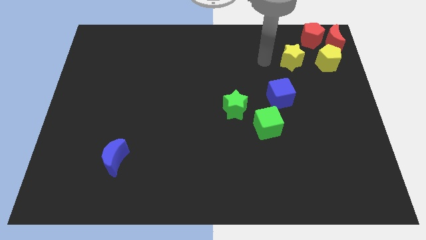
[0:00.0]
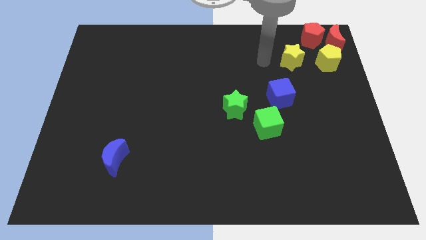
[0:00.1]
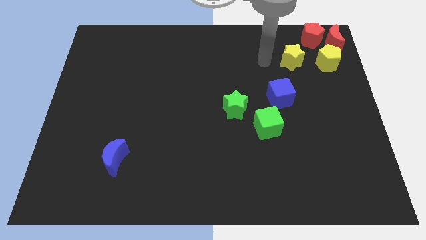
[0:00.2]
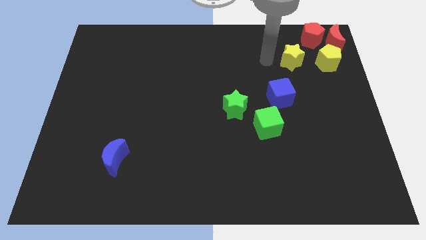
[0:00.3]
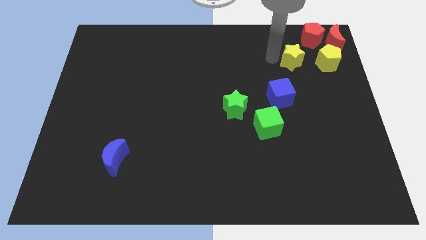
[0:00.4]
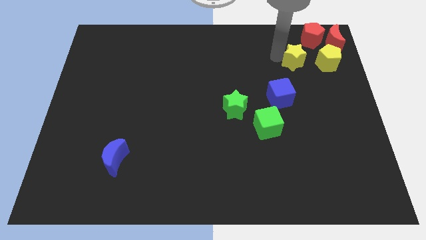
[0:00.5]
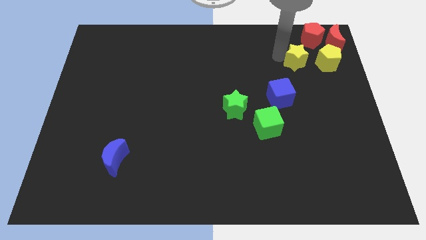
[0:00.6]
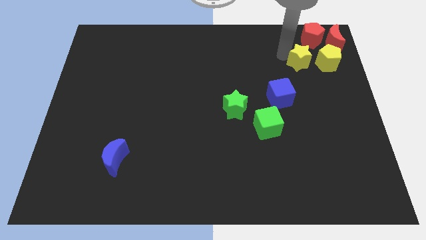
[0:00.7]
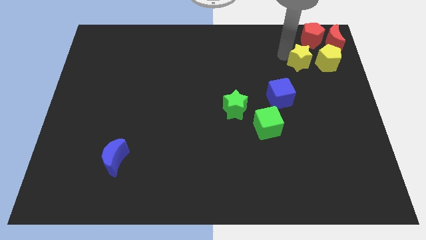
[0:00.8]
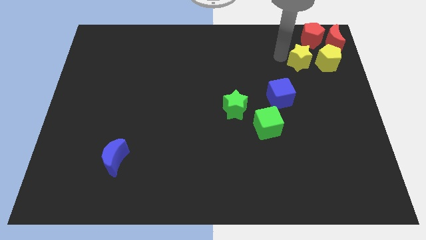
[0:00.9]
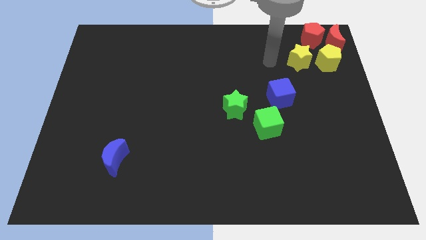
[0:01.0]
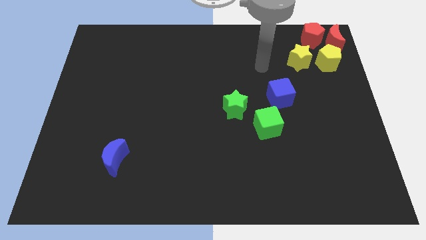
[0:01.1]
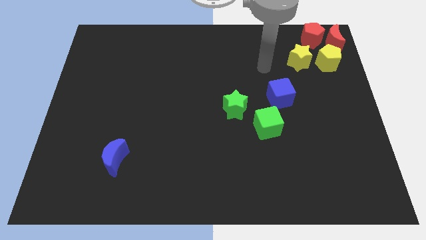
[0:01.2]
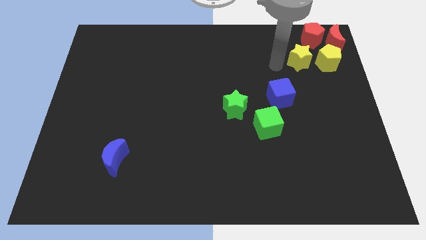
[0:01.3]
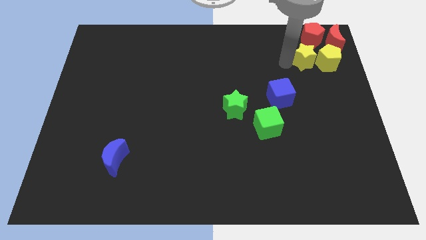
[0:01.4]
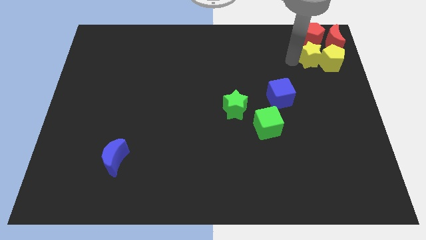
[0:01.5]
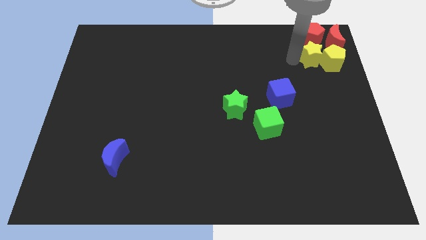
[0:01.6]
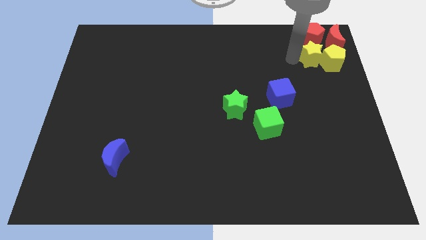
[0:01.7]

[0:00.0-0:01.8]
place the yellow star at the left side of yellow pentagon

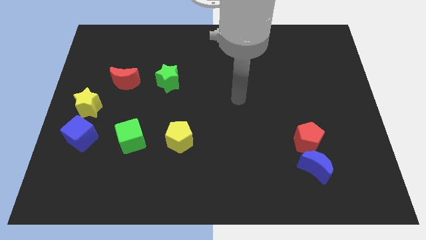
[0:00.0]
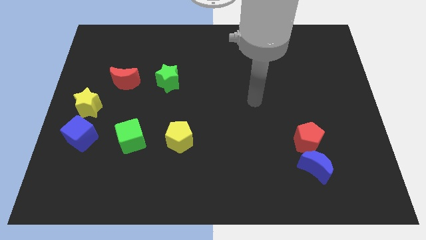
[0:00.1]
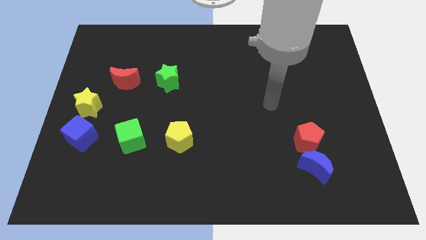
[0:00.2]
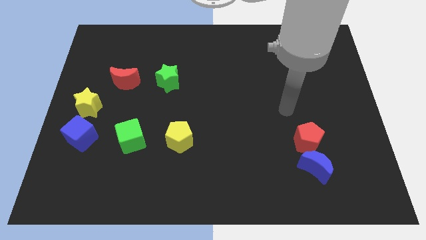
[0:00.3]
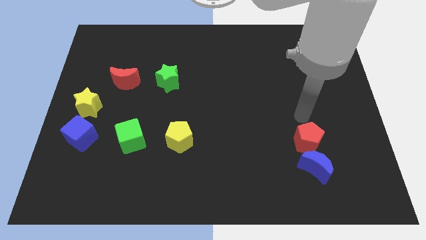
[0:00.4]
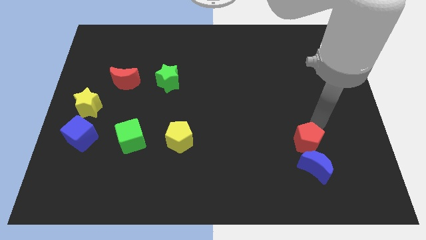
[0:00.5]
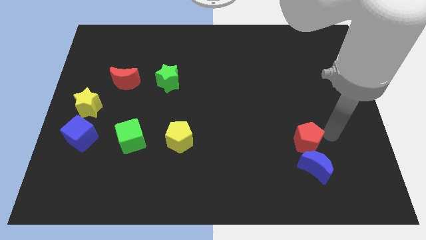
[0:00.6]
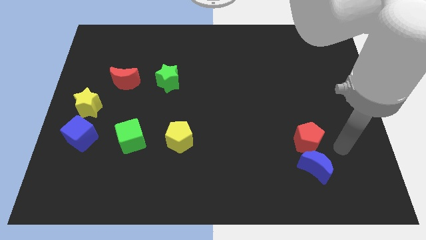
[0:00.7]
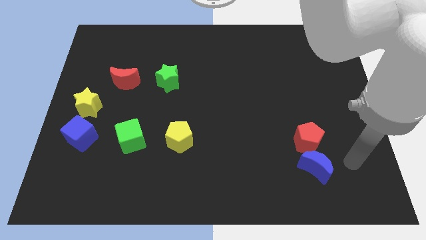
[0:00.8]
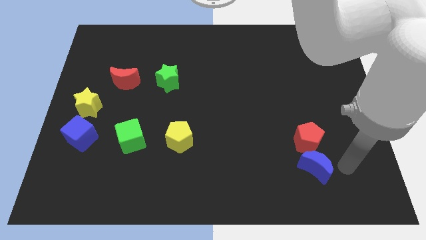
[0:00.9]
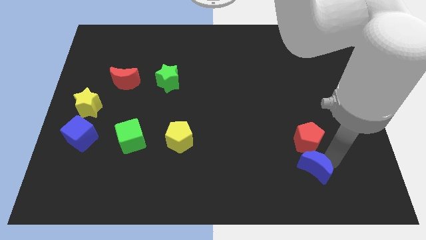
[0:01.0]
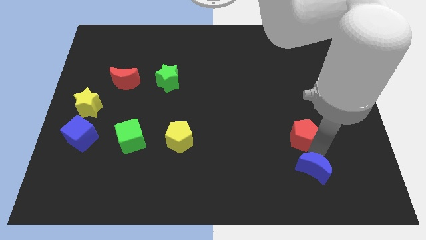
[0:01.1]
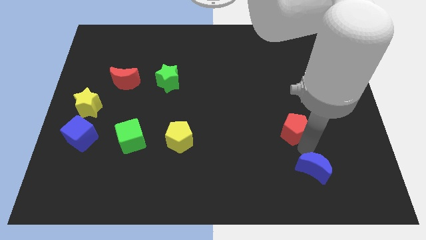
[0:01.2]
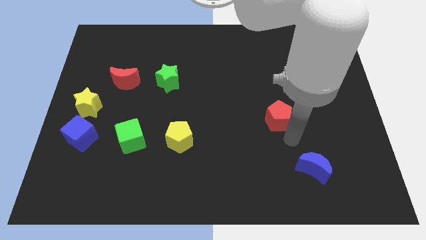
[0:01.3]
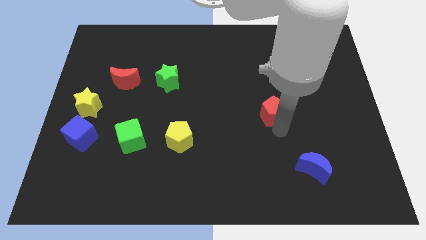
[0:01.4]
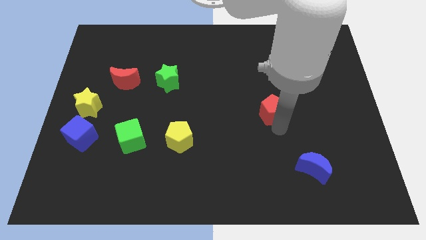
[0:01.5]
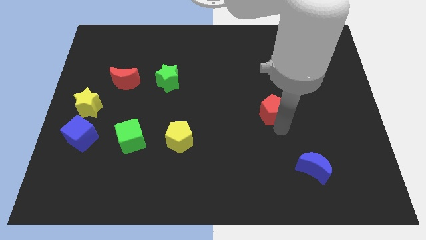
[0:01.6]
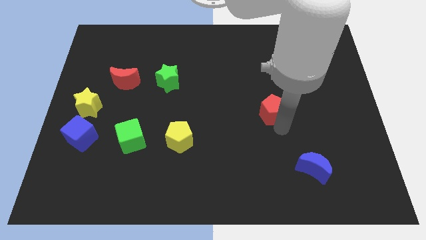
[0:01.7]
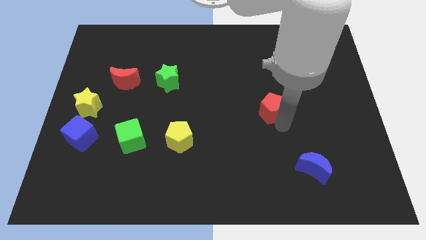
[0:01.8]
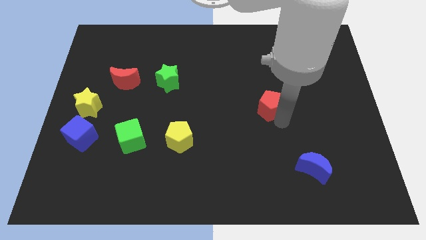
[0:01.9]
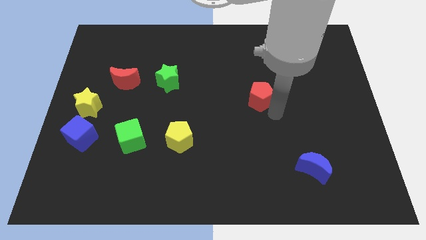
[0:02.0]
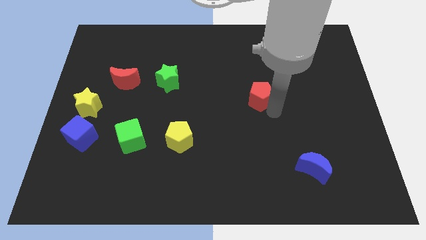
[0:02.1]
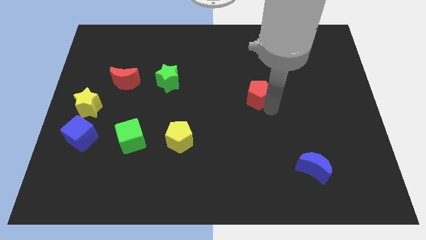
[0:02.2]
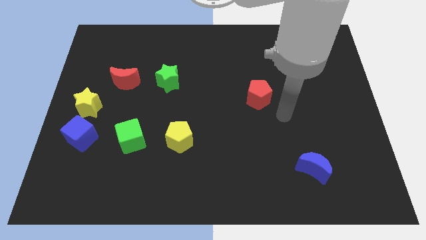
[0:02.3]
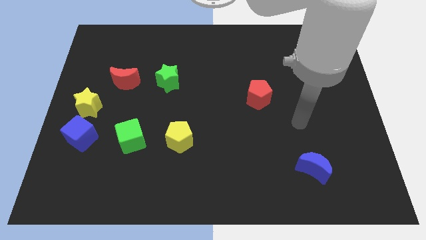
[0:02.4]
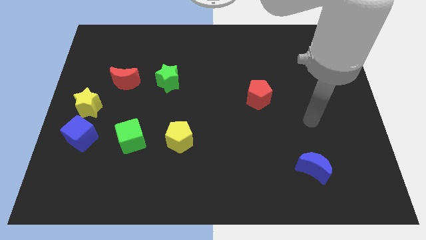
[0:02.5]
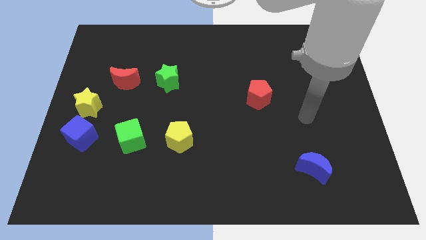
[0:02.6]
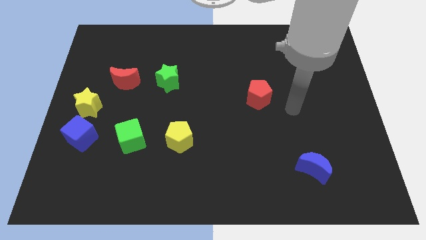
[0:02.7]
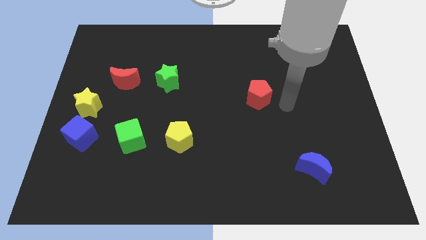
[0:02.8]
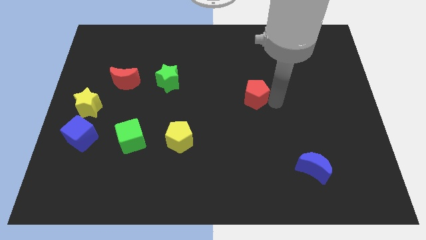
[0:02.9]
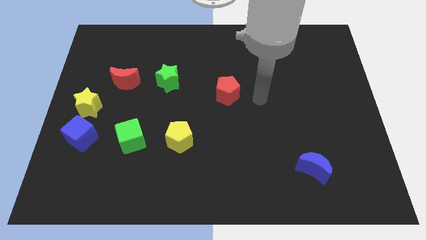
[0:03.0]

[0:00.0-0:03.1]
move the red pentagon away from the blue moon

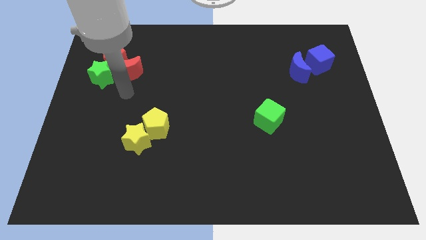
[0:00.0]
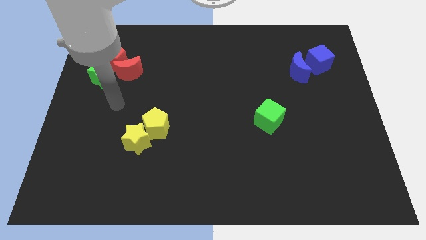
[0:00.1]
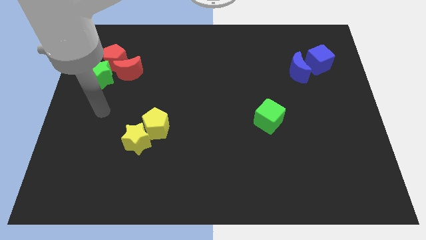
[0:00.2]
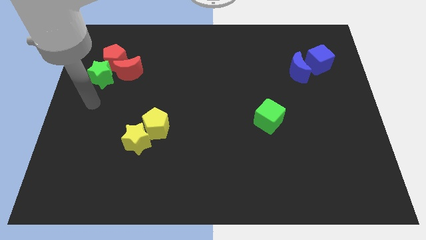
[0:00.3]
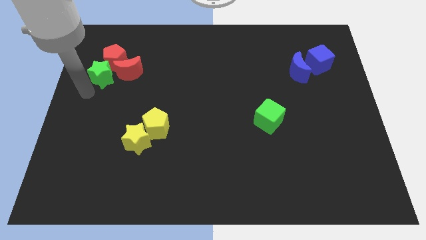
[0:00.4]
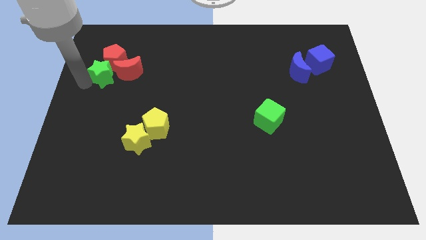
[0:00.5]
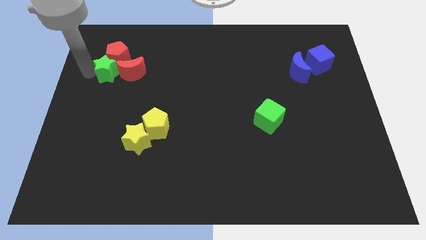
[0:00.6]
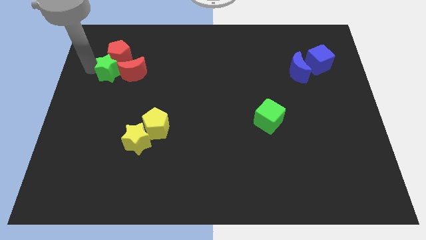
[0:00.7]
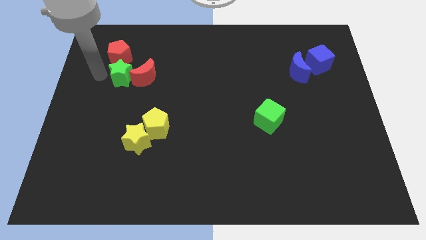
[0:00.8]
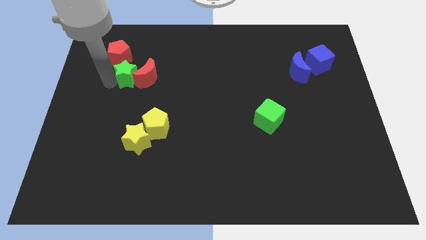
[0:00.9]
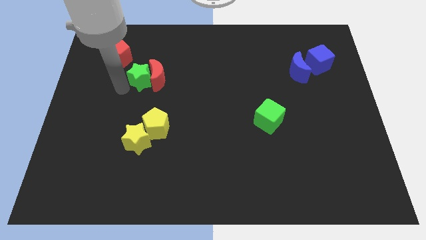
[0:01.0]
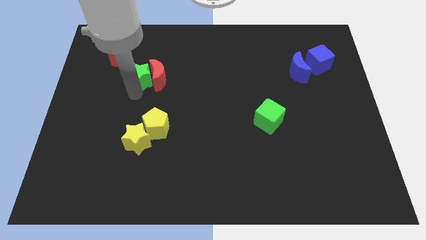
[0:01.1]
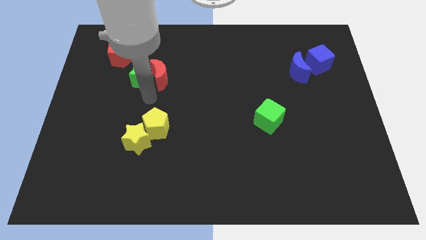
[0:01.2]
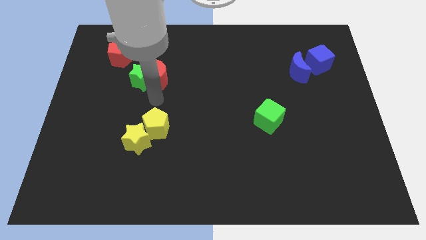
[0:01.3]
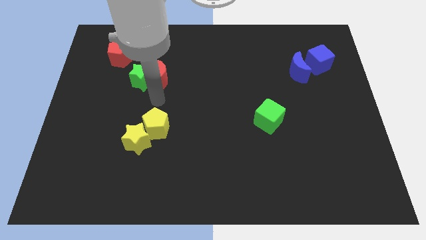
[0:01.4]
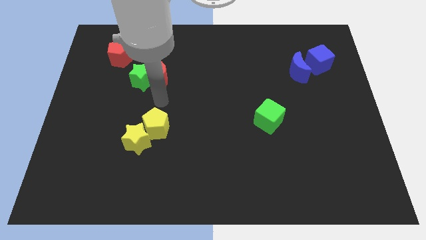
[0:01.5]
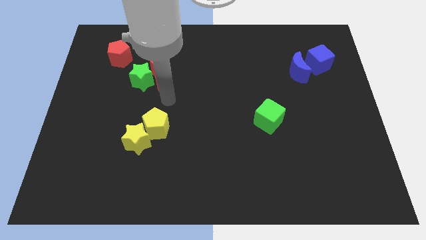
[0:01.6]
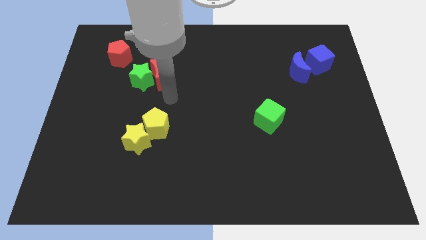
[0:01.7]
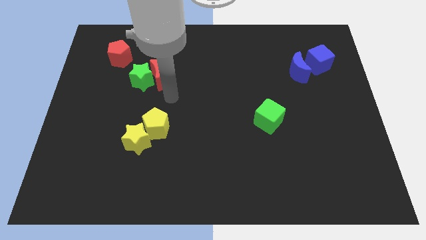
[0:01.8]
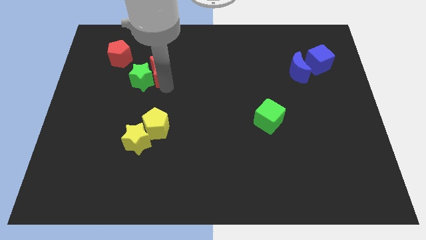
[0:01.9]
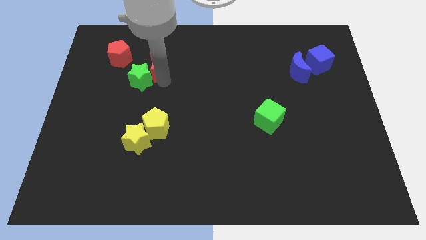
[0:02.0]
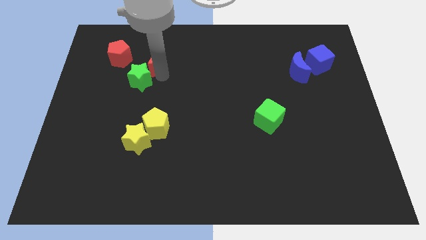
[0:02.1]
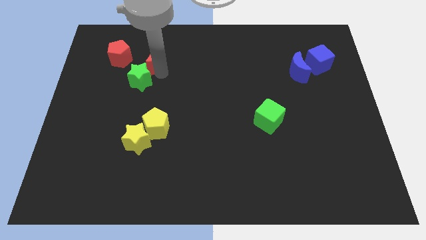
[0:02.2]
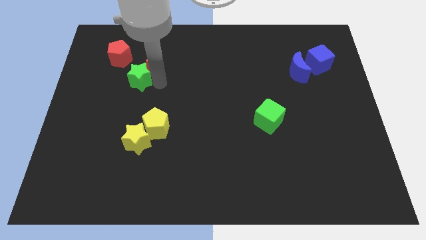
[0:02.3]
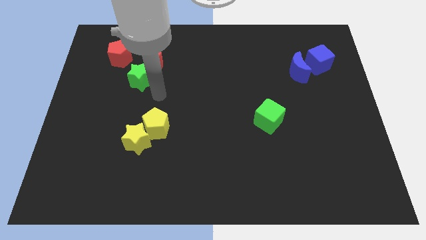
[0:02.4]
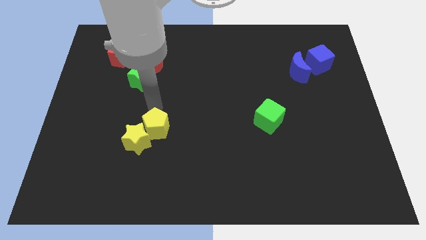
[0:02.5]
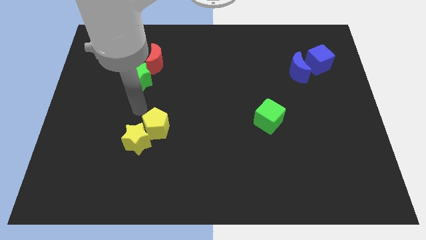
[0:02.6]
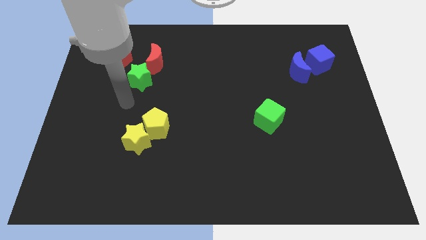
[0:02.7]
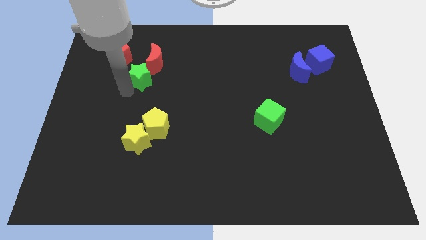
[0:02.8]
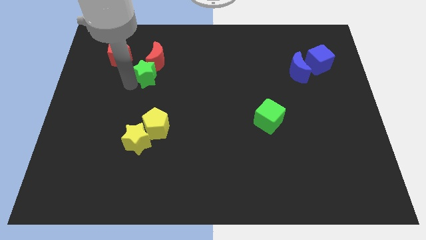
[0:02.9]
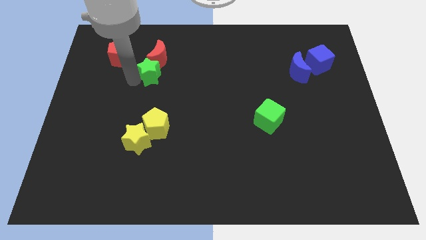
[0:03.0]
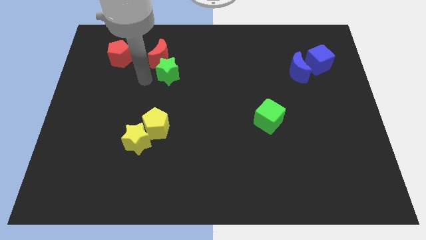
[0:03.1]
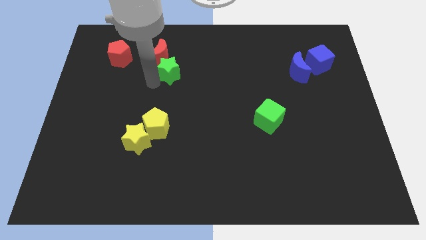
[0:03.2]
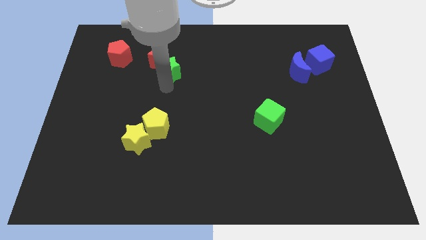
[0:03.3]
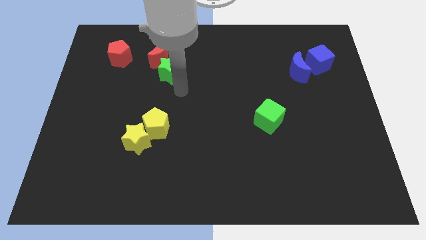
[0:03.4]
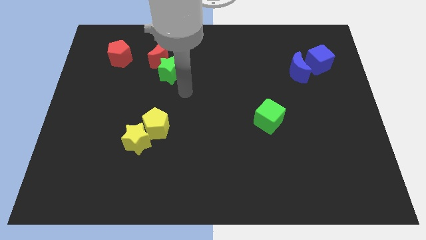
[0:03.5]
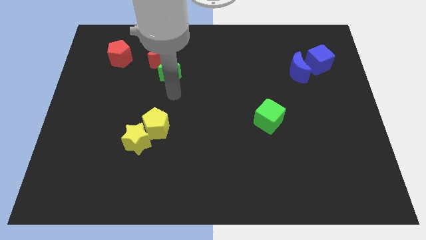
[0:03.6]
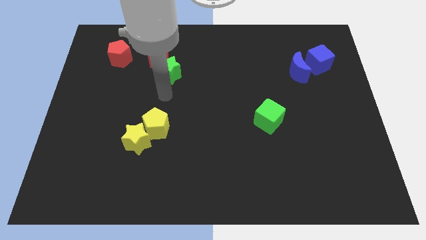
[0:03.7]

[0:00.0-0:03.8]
separate the green star from the red pentagon

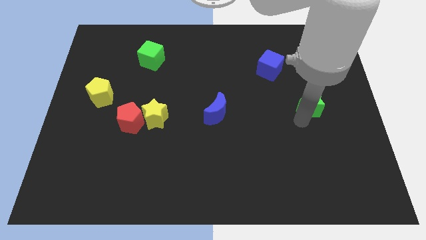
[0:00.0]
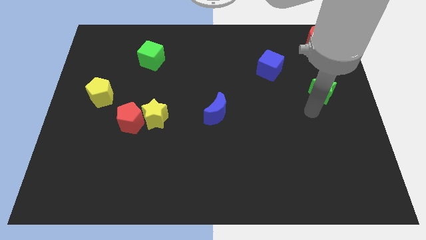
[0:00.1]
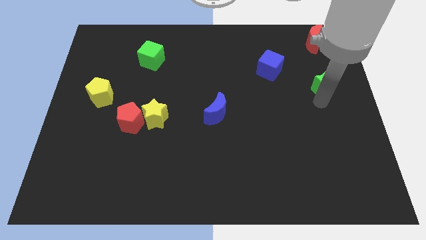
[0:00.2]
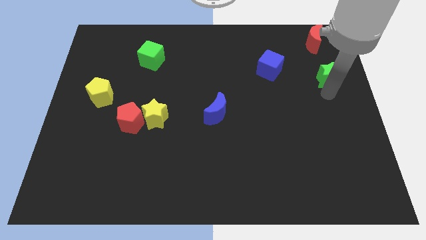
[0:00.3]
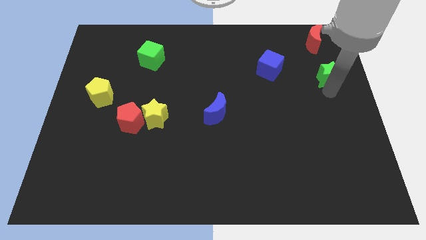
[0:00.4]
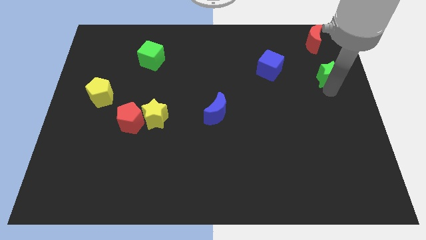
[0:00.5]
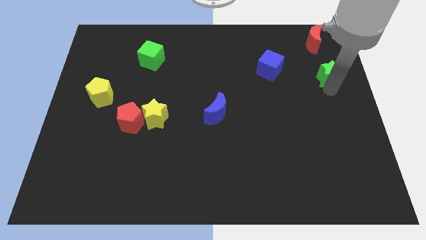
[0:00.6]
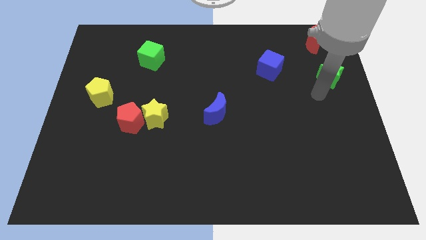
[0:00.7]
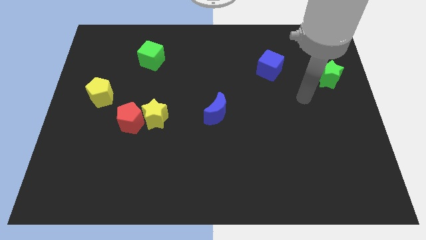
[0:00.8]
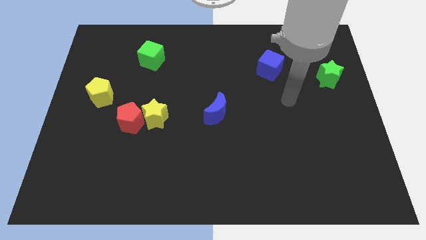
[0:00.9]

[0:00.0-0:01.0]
push the green star to the top right corner of the board
